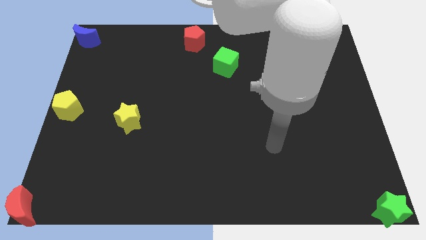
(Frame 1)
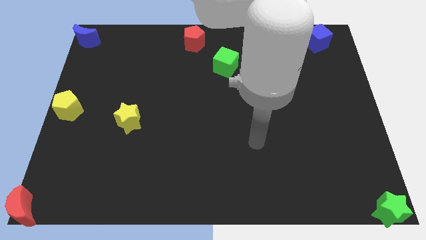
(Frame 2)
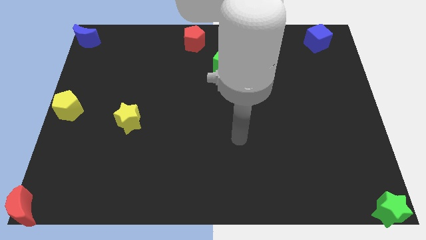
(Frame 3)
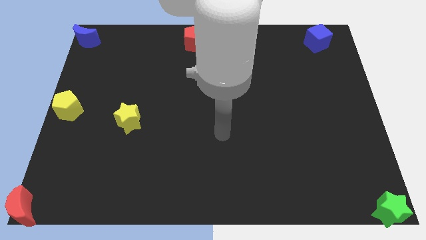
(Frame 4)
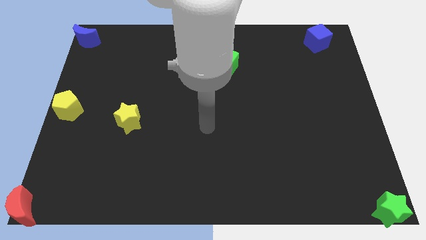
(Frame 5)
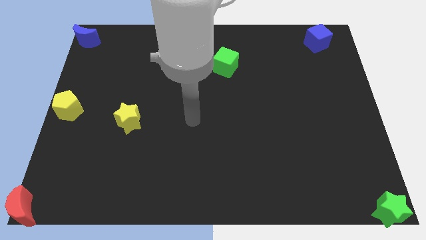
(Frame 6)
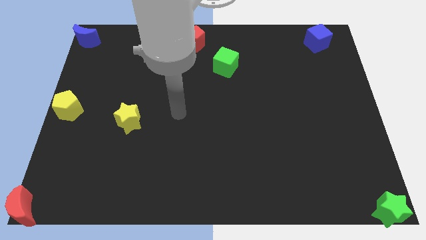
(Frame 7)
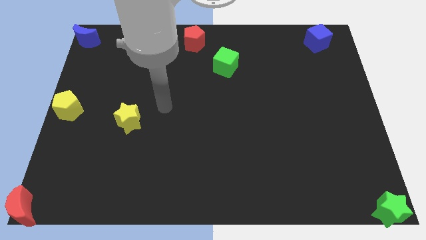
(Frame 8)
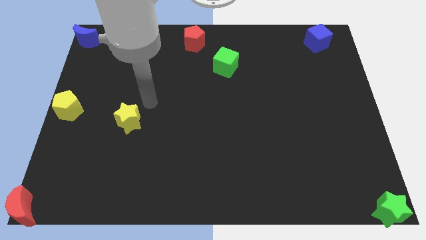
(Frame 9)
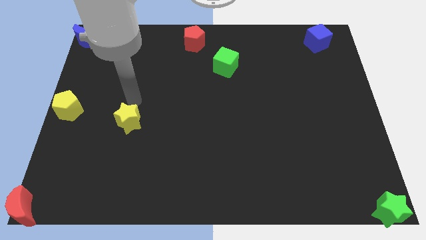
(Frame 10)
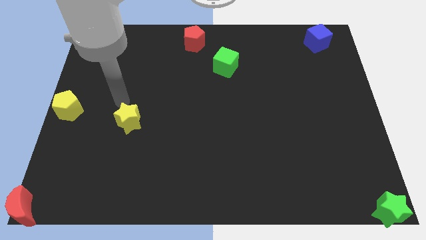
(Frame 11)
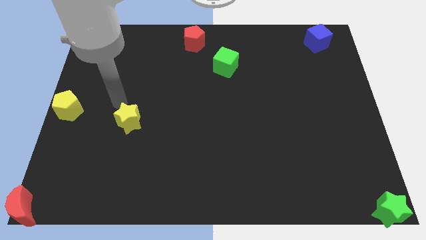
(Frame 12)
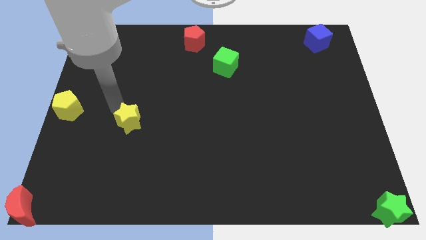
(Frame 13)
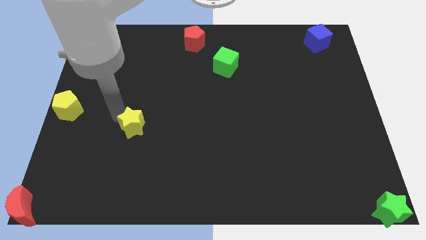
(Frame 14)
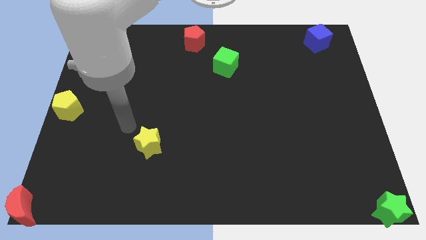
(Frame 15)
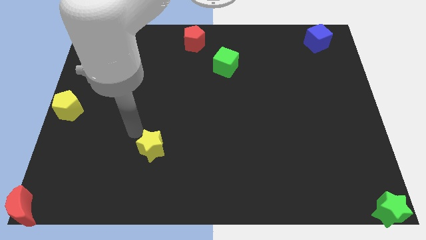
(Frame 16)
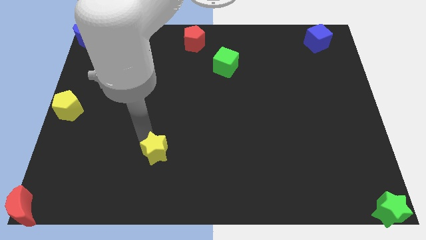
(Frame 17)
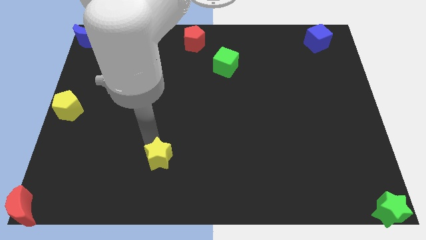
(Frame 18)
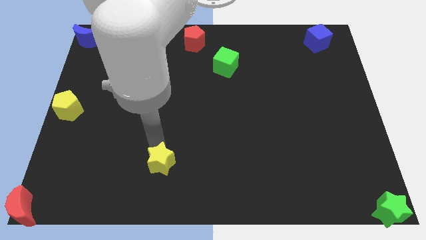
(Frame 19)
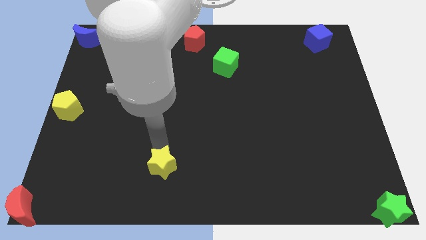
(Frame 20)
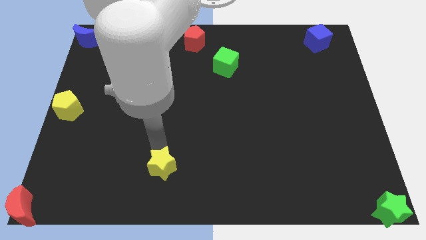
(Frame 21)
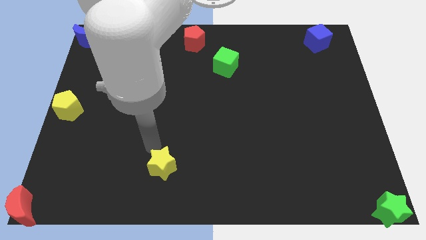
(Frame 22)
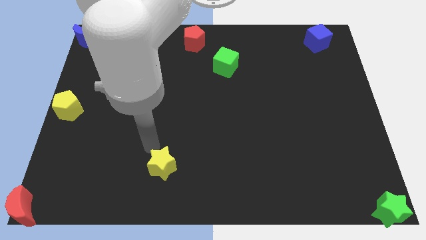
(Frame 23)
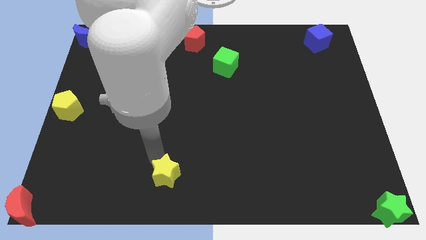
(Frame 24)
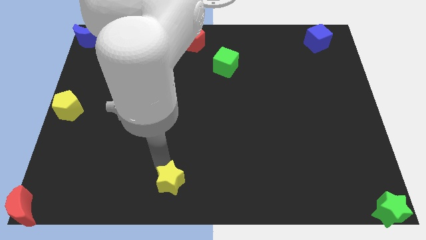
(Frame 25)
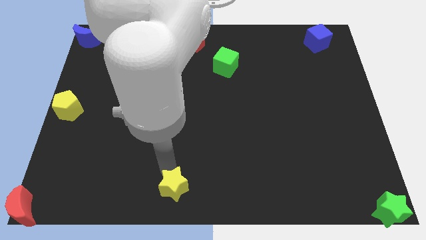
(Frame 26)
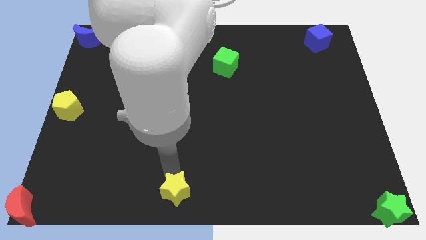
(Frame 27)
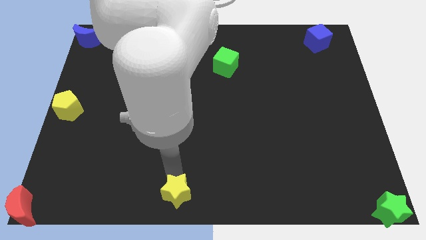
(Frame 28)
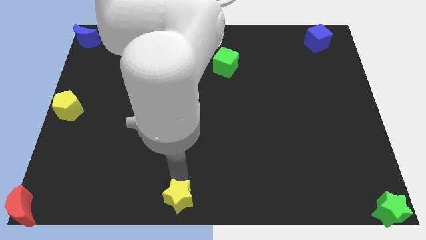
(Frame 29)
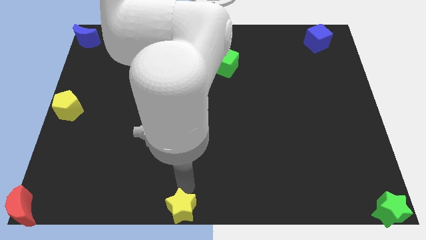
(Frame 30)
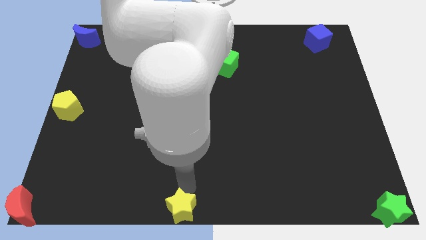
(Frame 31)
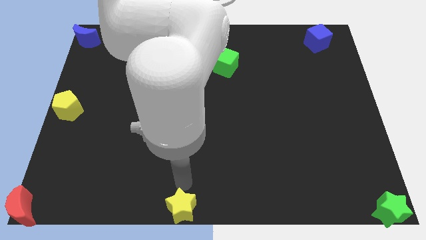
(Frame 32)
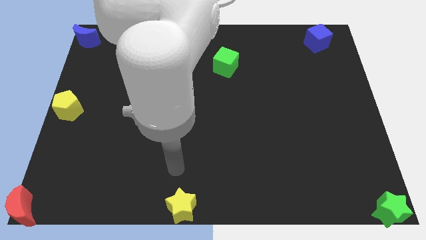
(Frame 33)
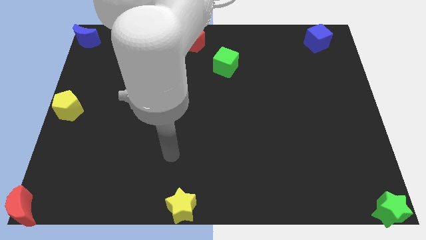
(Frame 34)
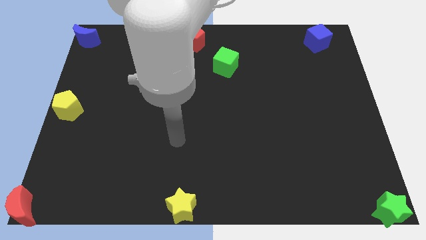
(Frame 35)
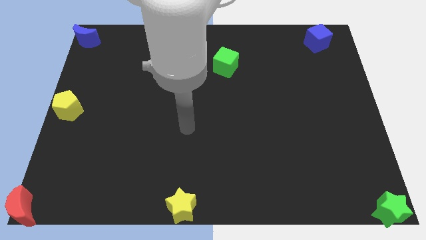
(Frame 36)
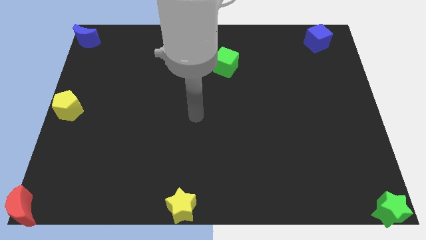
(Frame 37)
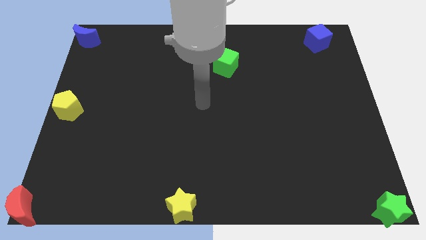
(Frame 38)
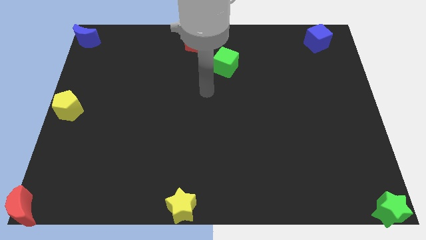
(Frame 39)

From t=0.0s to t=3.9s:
push the yellow star to the bottom center of the board

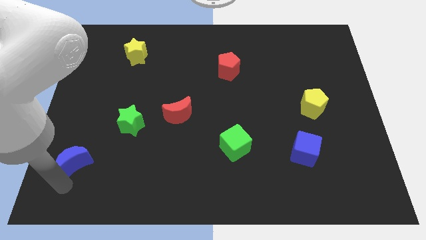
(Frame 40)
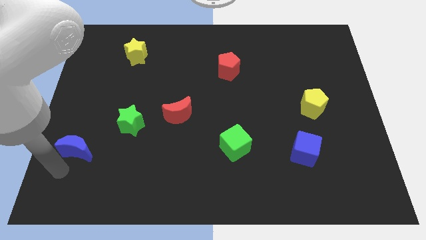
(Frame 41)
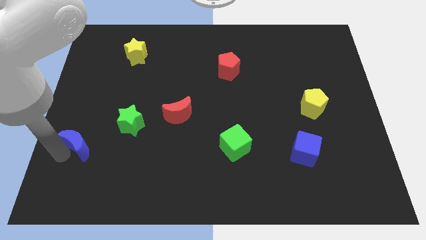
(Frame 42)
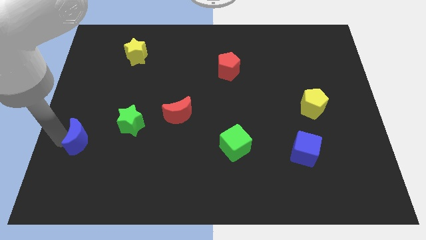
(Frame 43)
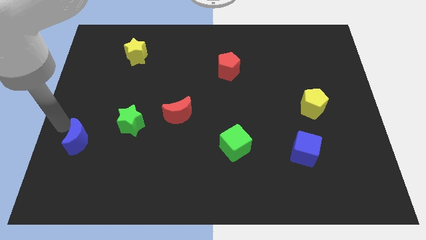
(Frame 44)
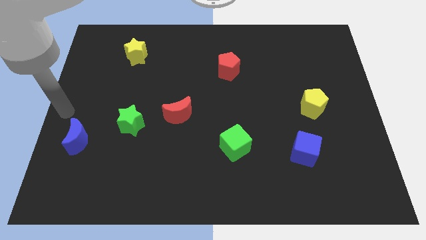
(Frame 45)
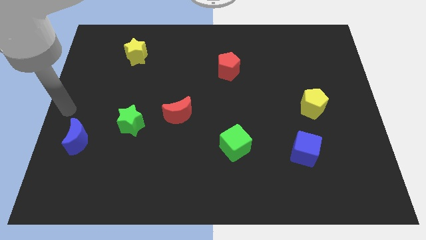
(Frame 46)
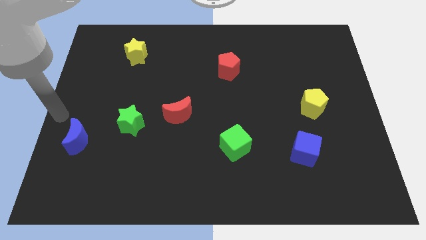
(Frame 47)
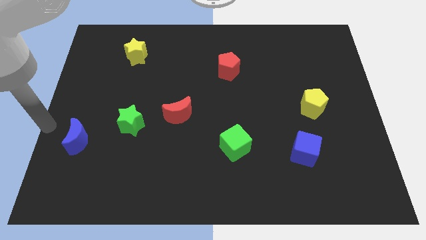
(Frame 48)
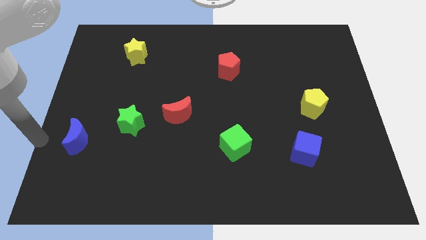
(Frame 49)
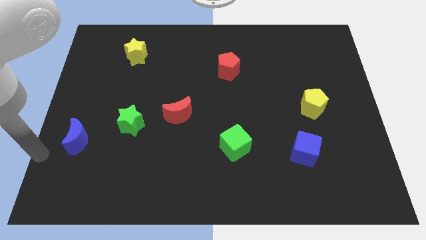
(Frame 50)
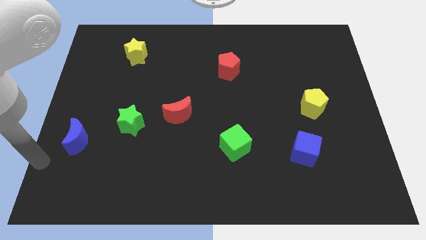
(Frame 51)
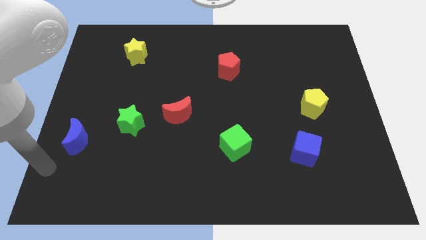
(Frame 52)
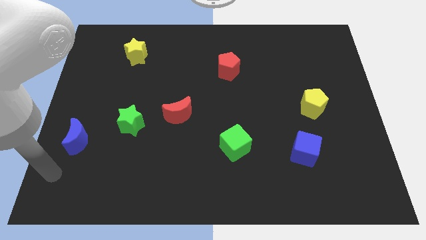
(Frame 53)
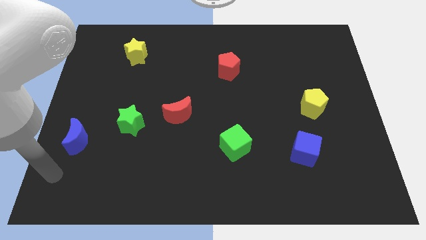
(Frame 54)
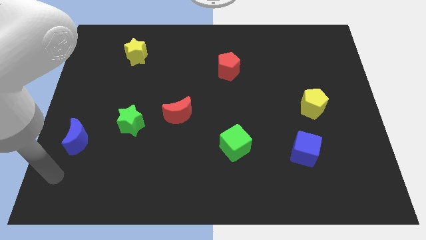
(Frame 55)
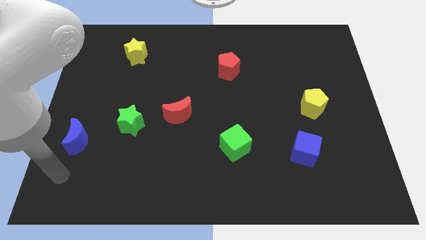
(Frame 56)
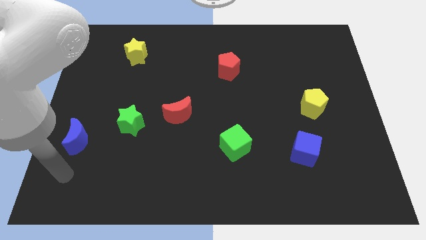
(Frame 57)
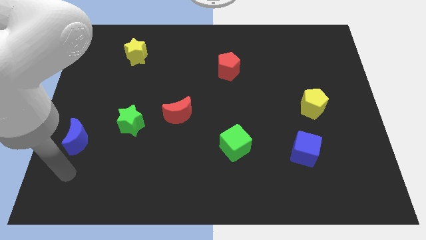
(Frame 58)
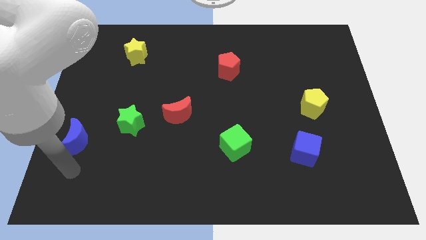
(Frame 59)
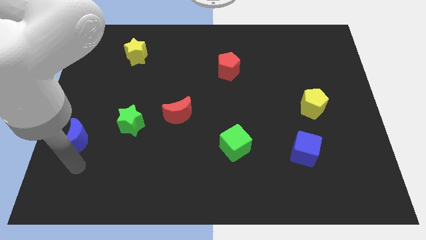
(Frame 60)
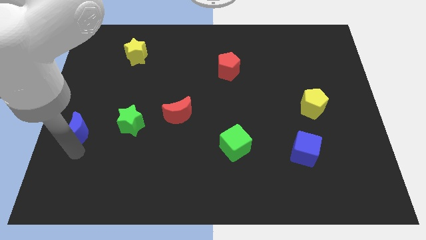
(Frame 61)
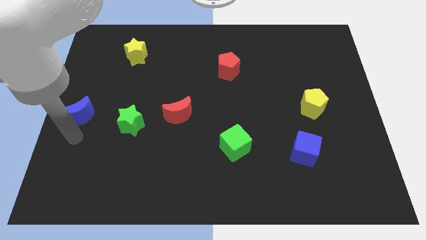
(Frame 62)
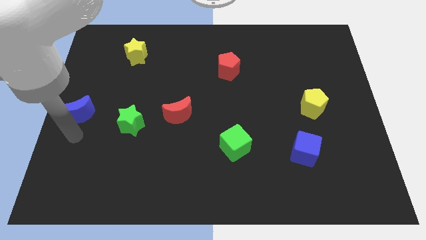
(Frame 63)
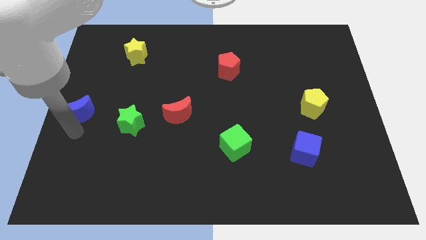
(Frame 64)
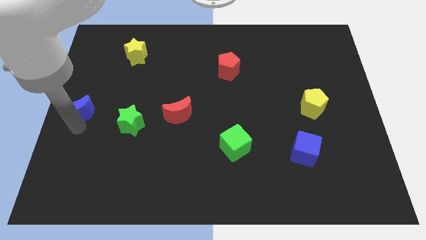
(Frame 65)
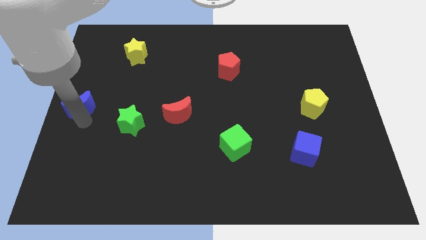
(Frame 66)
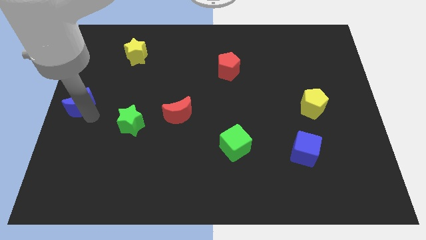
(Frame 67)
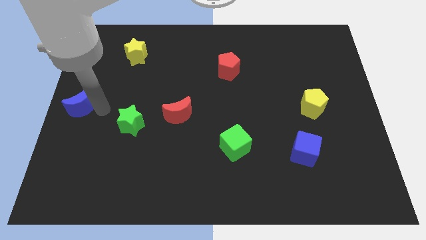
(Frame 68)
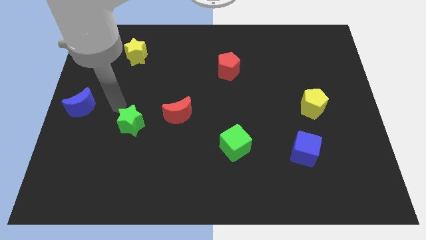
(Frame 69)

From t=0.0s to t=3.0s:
move the blue moon to the left of green star

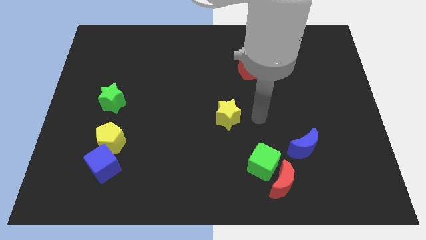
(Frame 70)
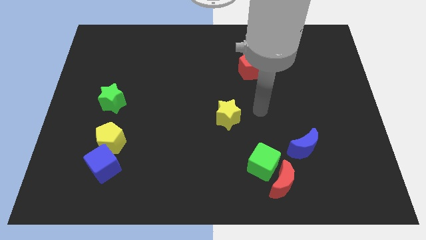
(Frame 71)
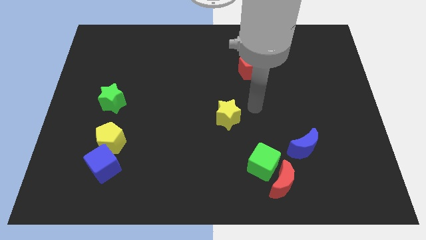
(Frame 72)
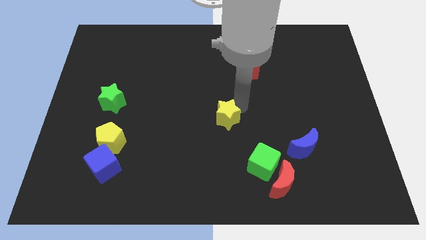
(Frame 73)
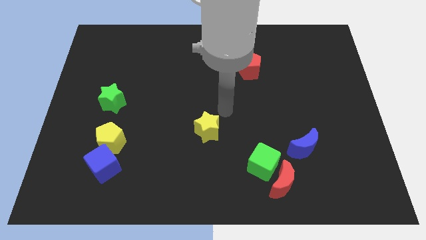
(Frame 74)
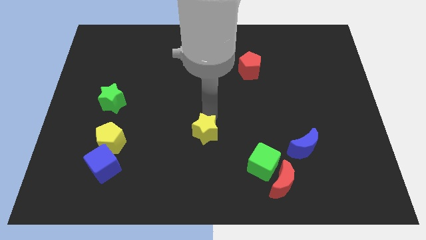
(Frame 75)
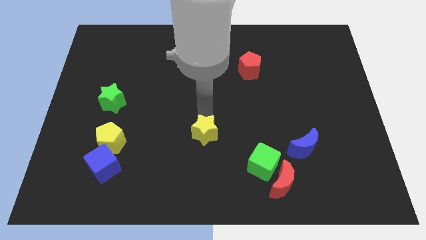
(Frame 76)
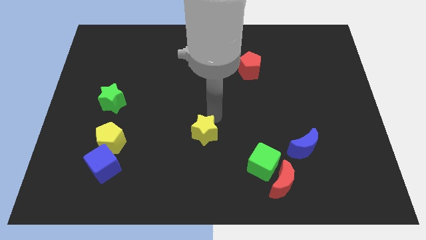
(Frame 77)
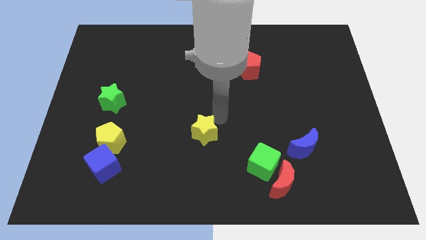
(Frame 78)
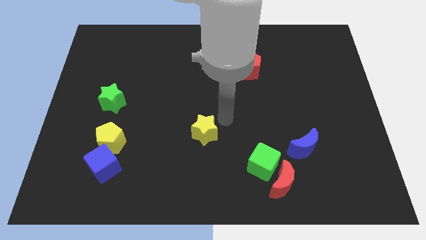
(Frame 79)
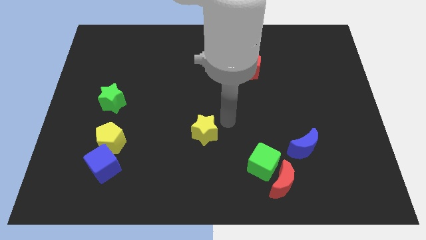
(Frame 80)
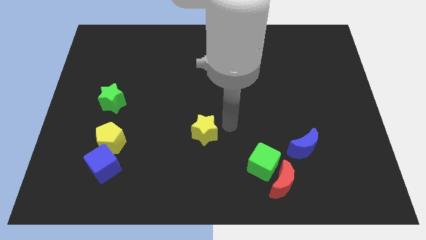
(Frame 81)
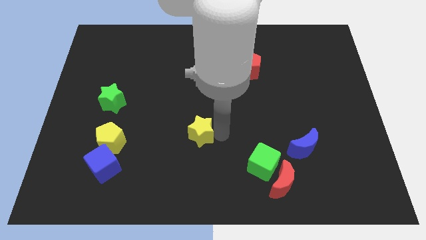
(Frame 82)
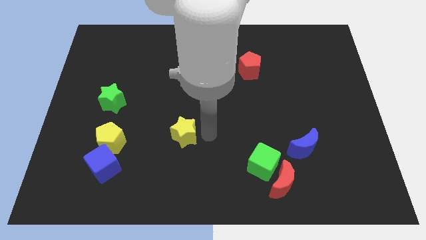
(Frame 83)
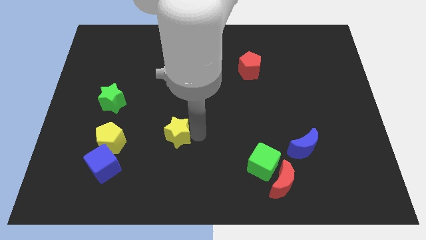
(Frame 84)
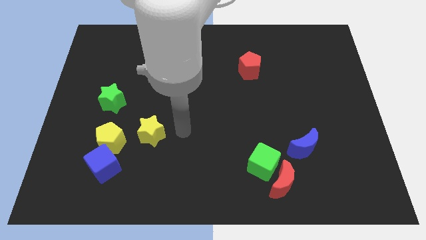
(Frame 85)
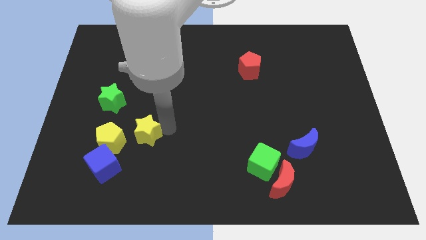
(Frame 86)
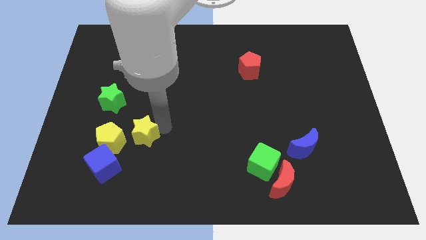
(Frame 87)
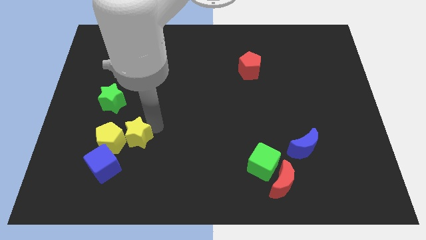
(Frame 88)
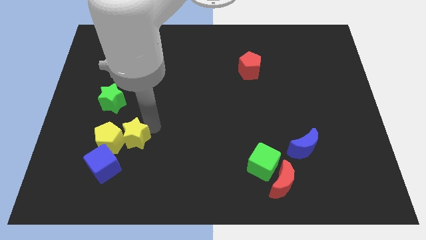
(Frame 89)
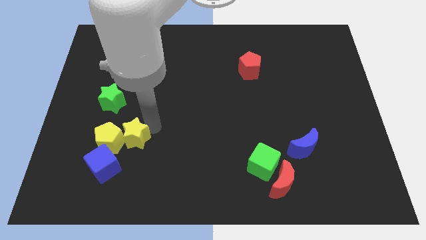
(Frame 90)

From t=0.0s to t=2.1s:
push yellow star into yellow pentagon

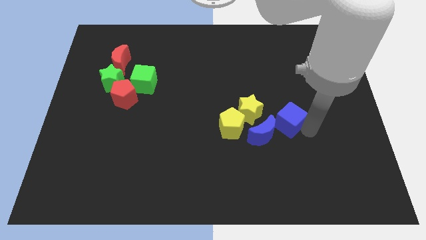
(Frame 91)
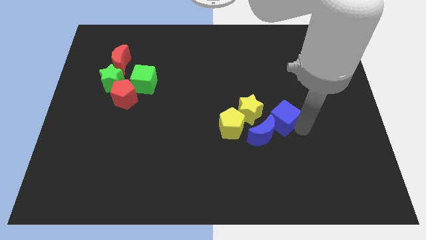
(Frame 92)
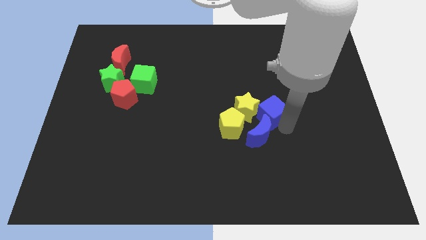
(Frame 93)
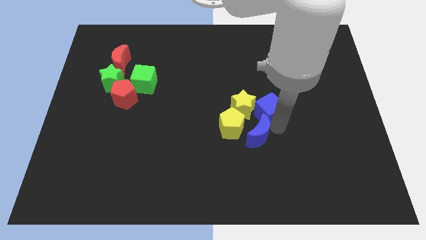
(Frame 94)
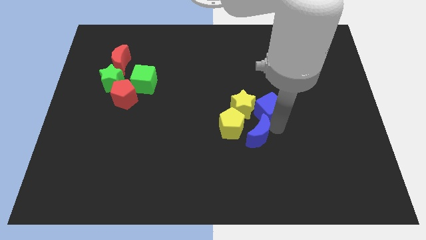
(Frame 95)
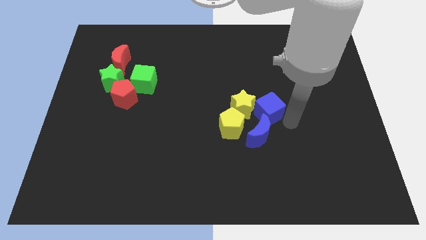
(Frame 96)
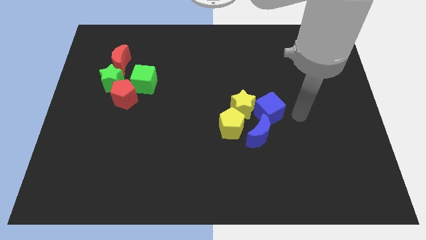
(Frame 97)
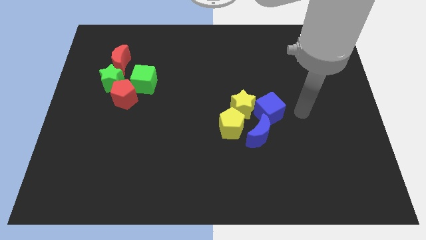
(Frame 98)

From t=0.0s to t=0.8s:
move the blue cube to the right side of the yellow star on the board
